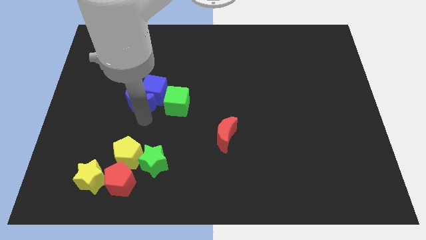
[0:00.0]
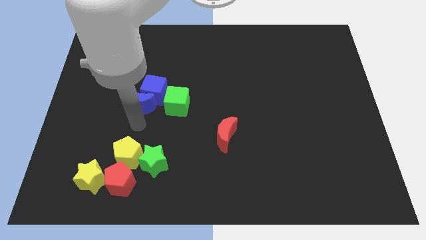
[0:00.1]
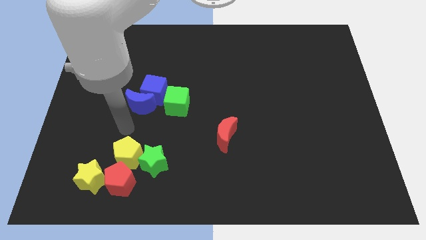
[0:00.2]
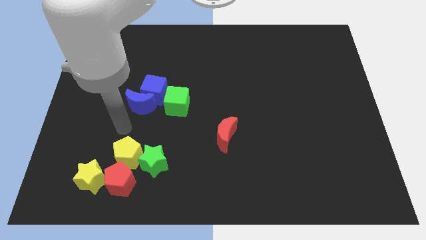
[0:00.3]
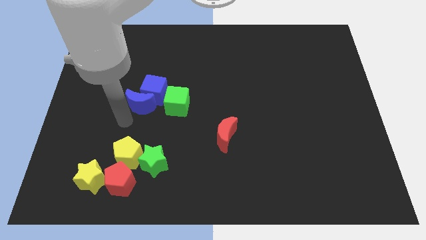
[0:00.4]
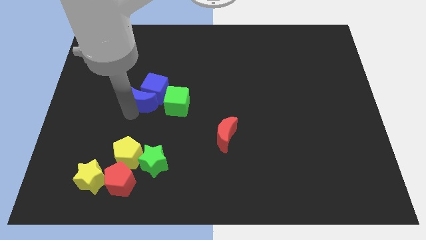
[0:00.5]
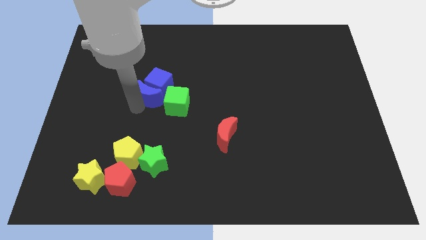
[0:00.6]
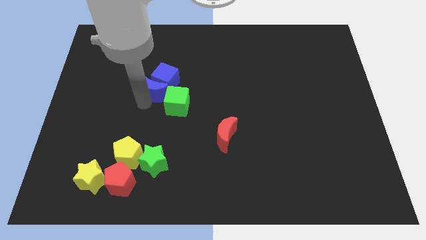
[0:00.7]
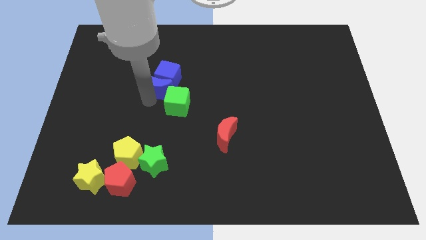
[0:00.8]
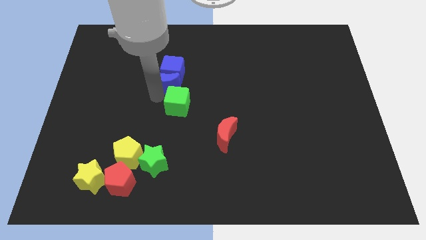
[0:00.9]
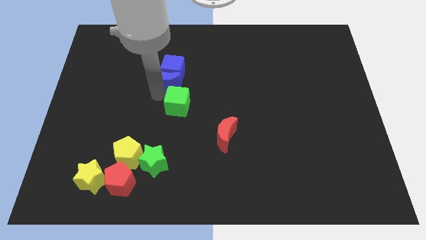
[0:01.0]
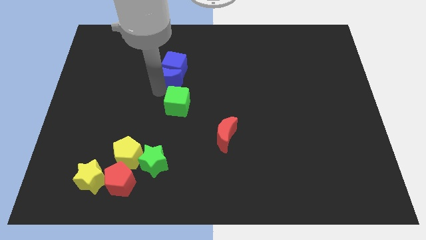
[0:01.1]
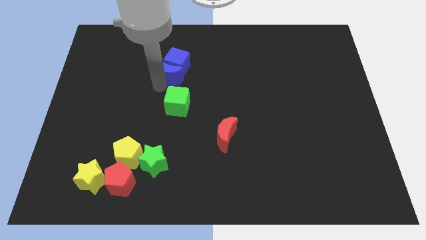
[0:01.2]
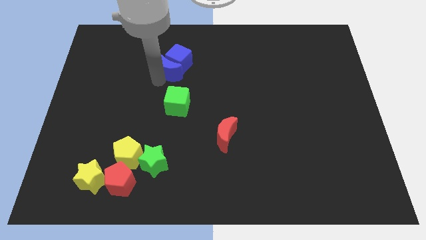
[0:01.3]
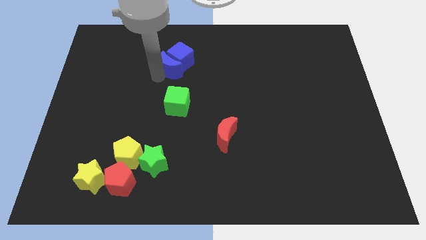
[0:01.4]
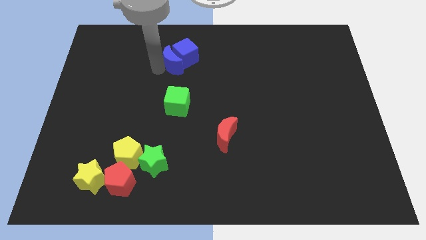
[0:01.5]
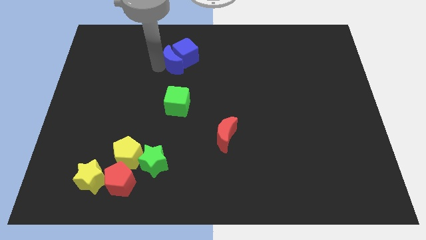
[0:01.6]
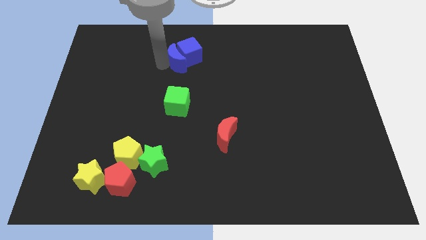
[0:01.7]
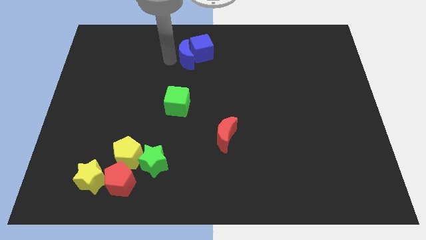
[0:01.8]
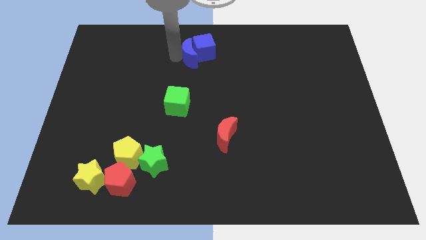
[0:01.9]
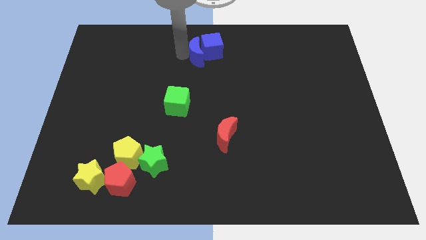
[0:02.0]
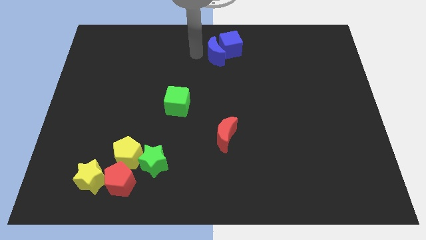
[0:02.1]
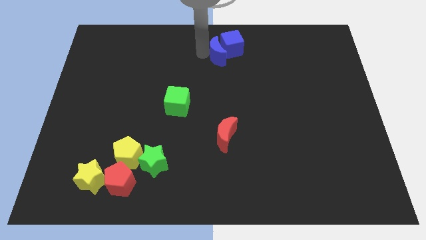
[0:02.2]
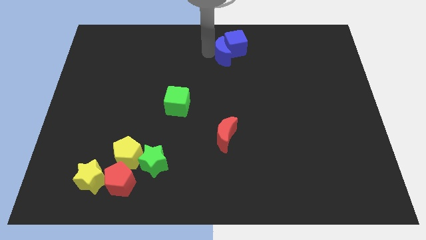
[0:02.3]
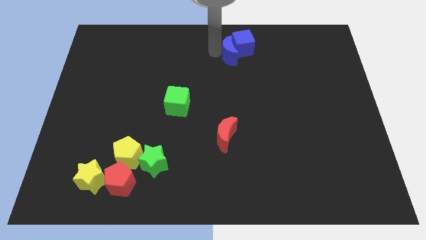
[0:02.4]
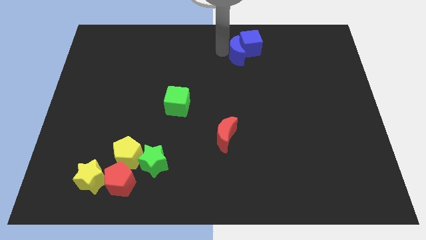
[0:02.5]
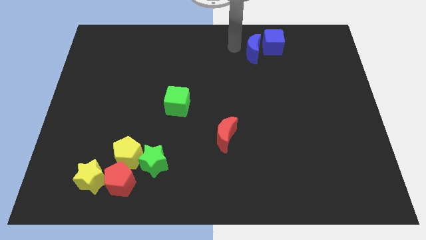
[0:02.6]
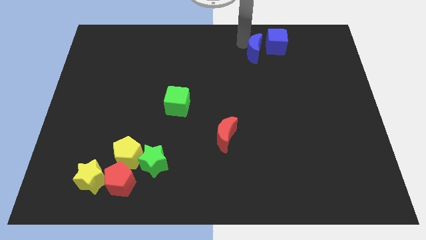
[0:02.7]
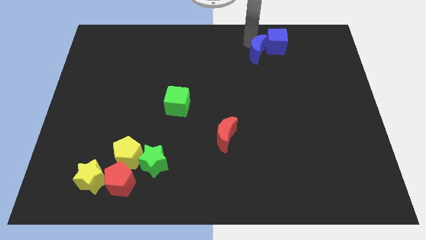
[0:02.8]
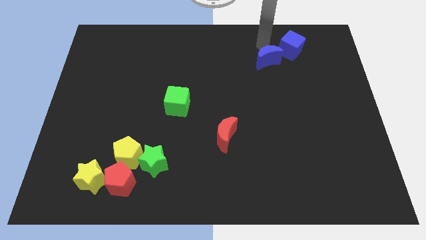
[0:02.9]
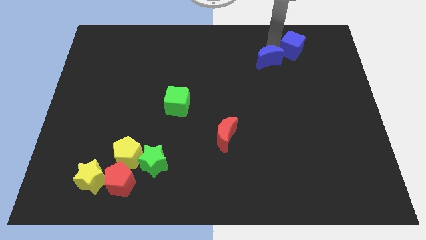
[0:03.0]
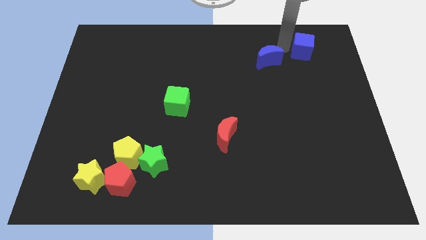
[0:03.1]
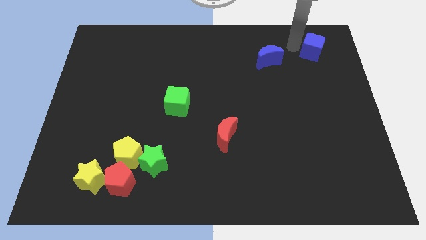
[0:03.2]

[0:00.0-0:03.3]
push the blue moon into the blue cube

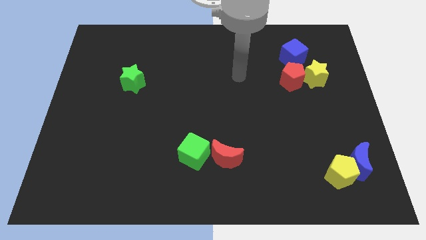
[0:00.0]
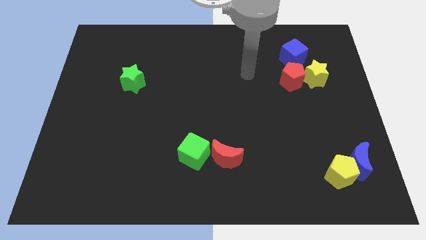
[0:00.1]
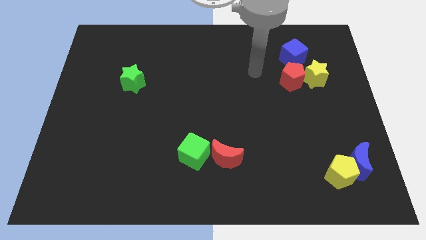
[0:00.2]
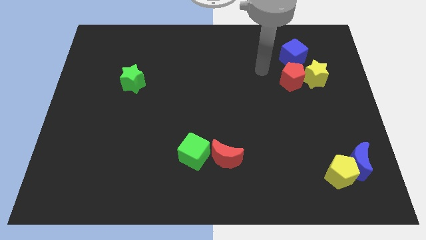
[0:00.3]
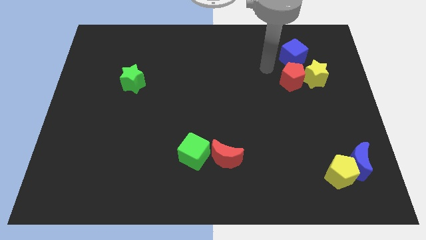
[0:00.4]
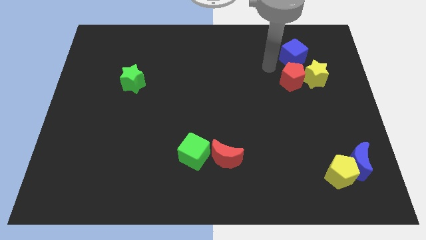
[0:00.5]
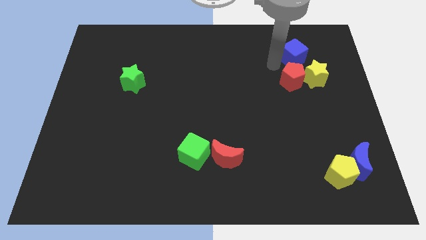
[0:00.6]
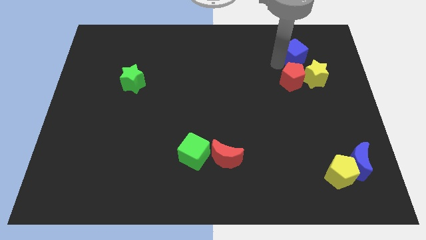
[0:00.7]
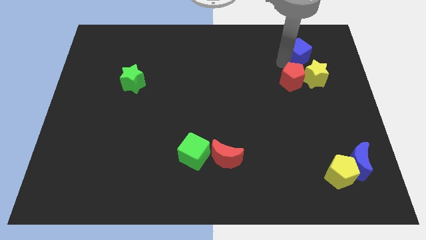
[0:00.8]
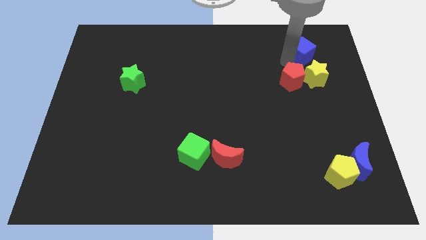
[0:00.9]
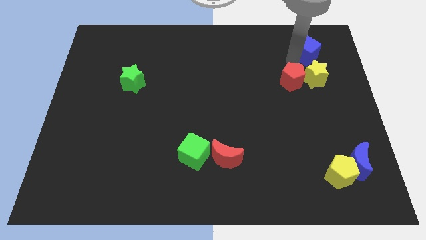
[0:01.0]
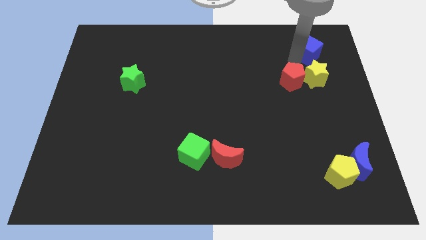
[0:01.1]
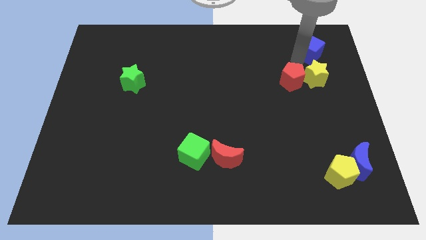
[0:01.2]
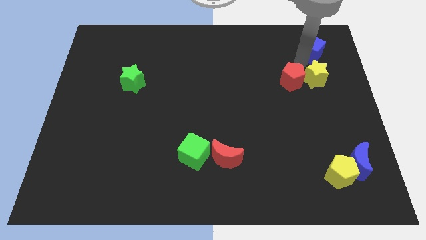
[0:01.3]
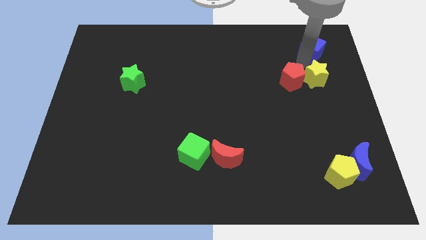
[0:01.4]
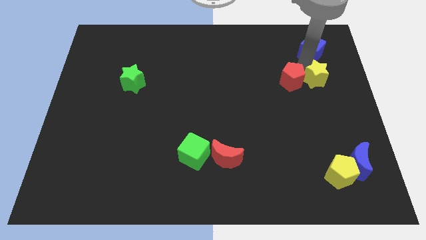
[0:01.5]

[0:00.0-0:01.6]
move the blue cube slightly towards the top right

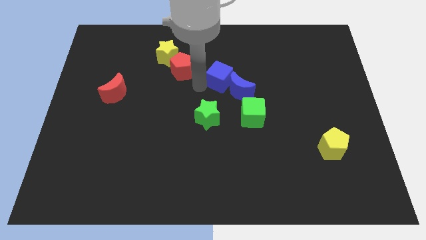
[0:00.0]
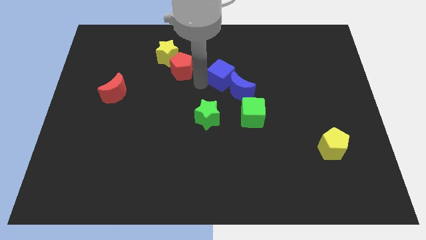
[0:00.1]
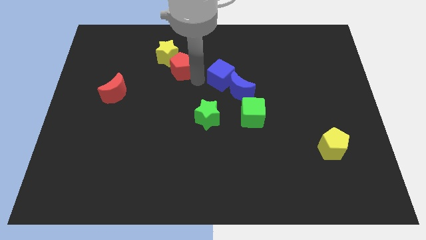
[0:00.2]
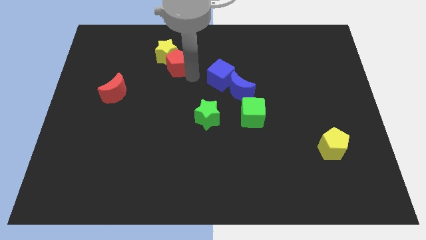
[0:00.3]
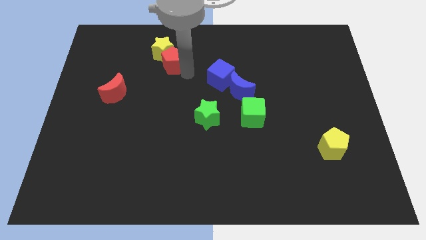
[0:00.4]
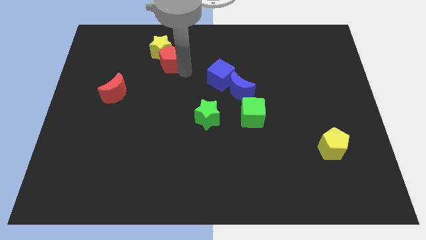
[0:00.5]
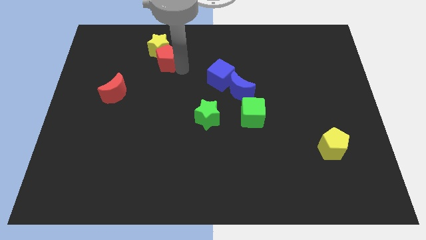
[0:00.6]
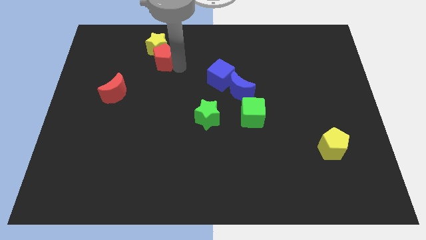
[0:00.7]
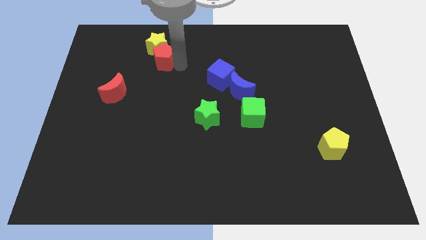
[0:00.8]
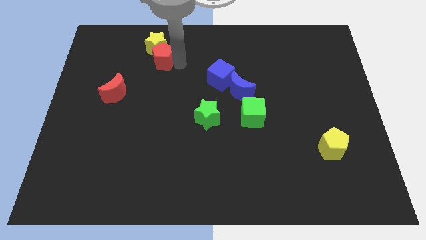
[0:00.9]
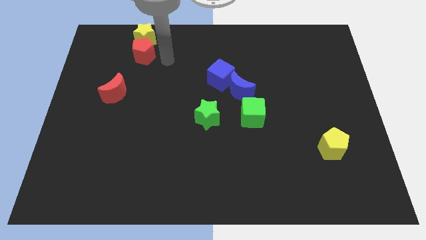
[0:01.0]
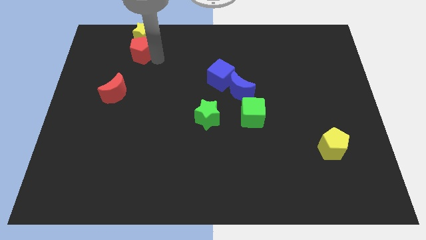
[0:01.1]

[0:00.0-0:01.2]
push the red pentagon and the yellow star up slightly

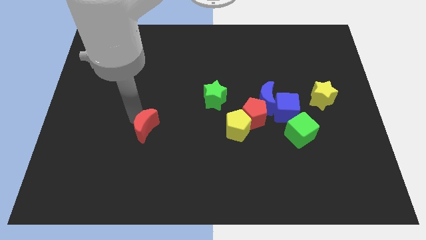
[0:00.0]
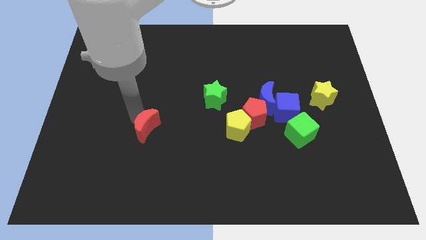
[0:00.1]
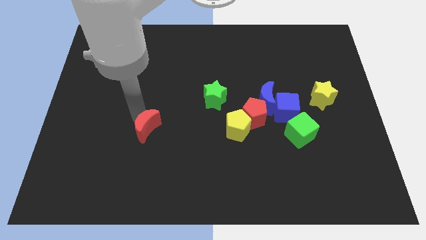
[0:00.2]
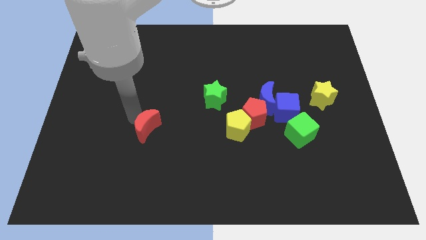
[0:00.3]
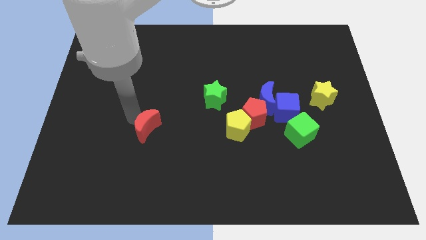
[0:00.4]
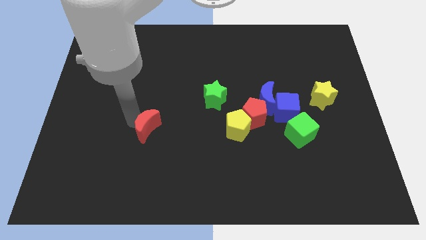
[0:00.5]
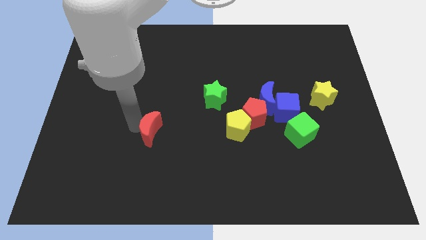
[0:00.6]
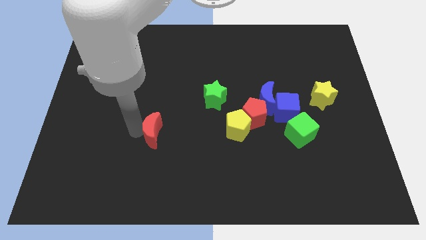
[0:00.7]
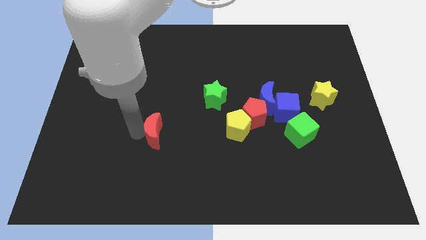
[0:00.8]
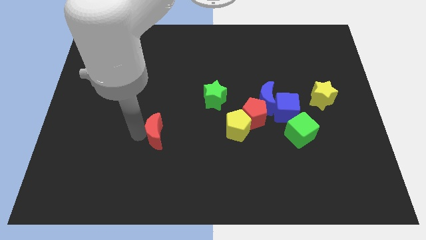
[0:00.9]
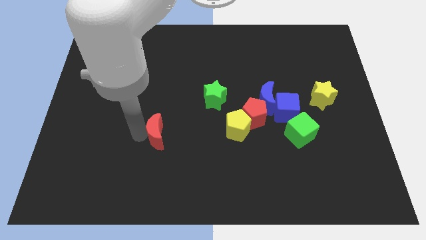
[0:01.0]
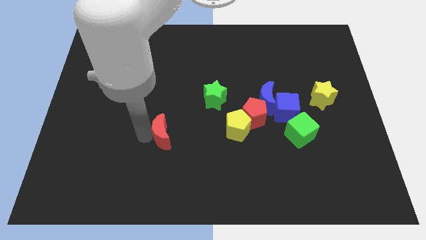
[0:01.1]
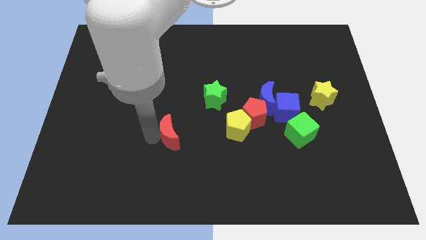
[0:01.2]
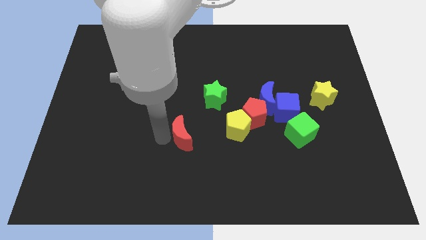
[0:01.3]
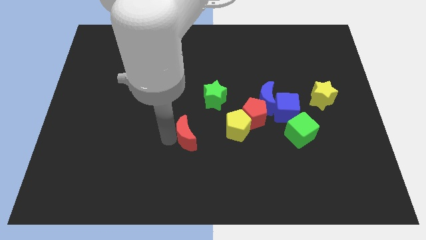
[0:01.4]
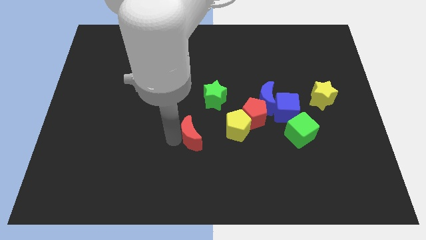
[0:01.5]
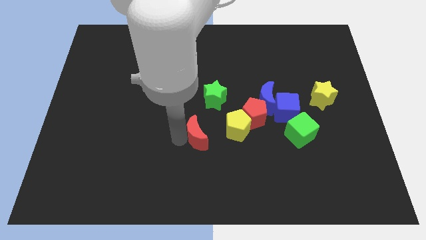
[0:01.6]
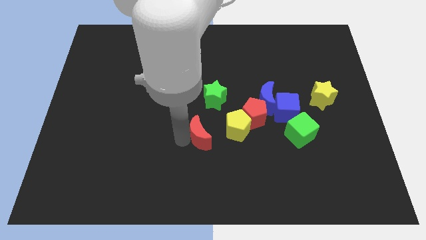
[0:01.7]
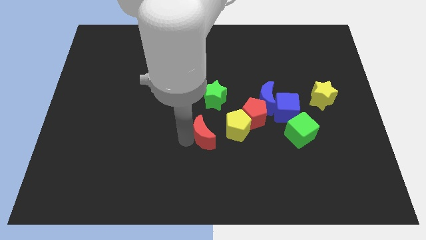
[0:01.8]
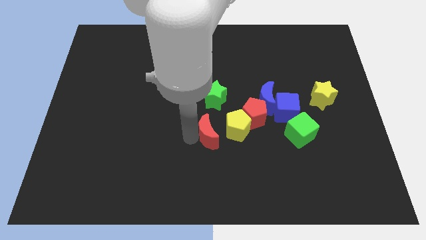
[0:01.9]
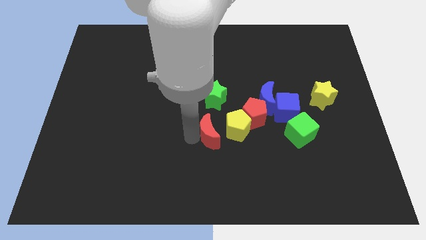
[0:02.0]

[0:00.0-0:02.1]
slide red moon into the yellow pentagon

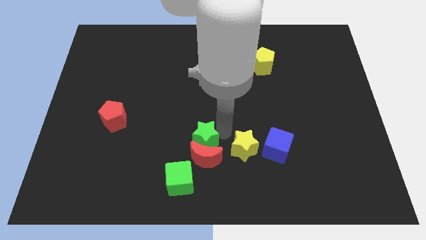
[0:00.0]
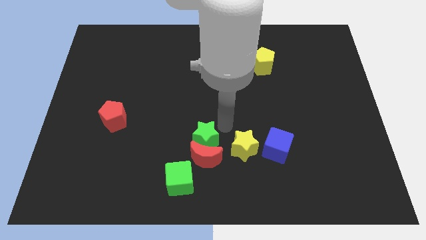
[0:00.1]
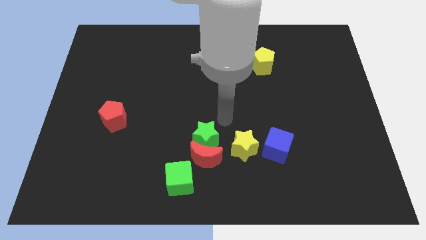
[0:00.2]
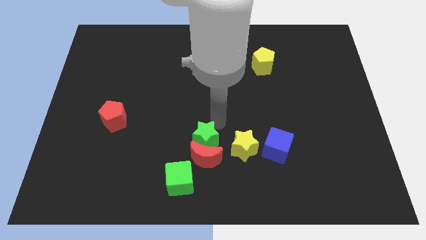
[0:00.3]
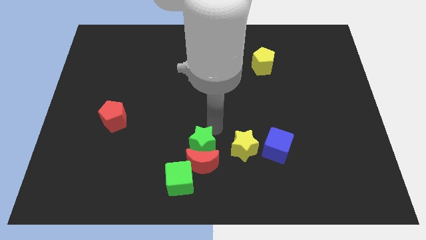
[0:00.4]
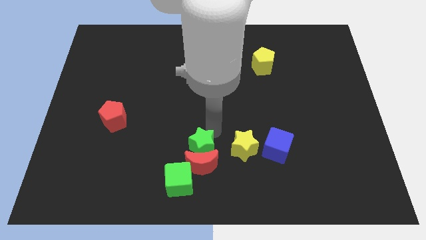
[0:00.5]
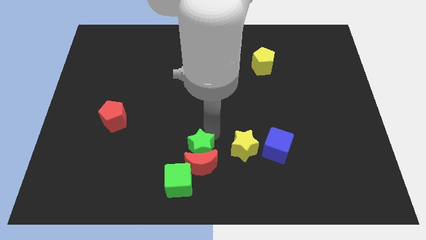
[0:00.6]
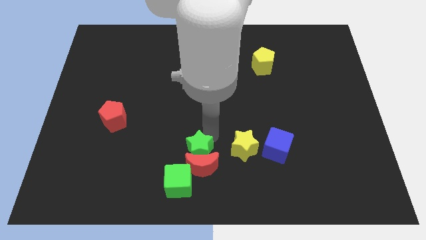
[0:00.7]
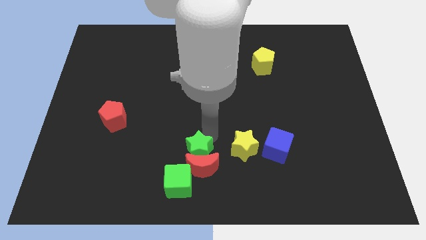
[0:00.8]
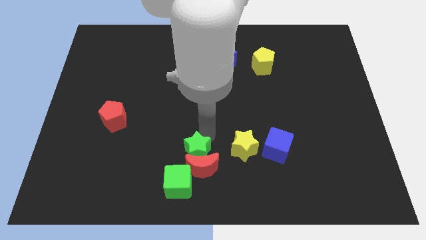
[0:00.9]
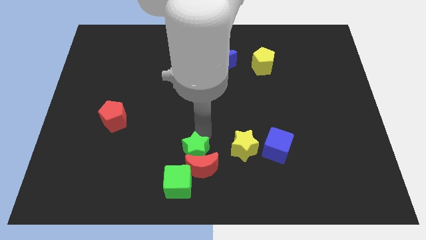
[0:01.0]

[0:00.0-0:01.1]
move the green star and the red moon slightly downwards
